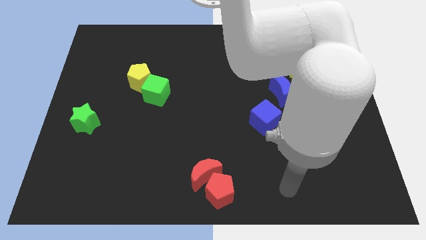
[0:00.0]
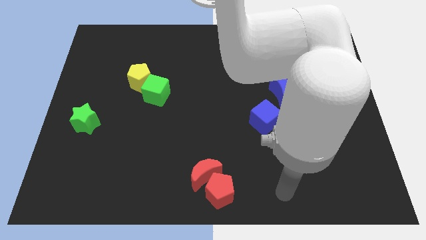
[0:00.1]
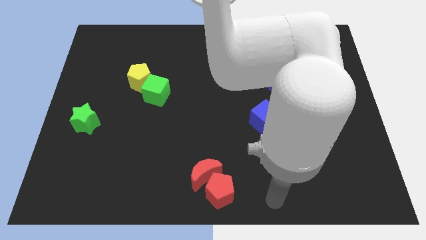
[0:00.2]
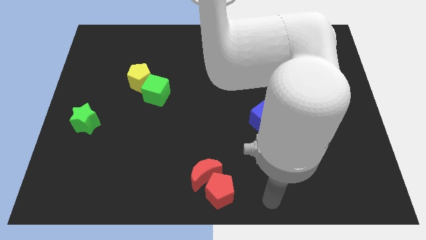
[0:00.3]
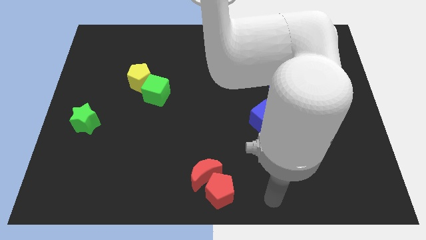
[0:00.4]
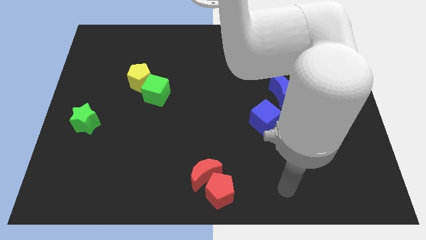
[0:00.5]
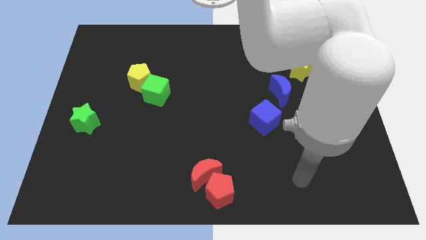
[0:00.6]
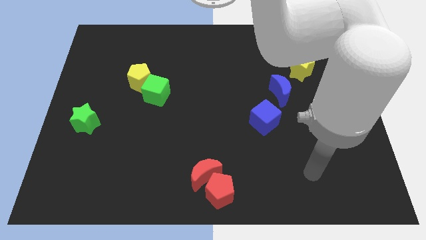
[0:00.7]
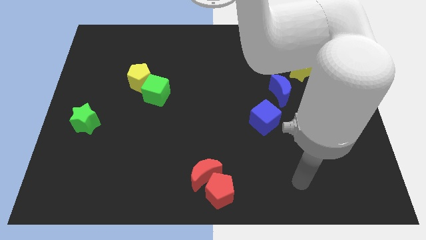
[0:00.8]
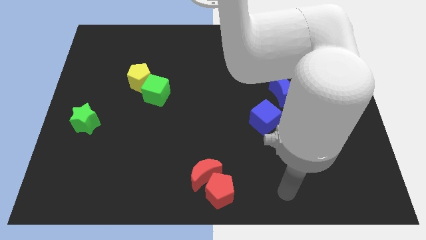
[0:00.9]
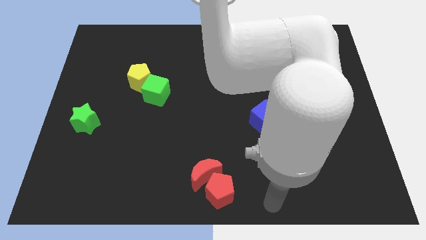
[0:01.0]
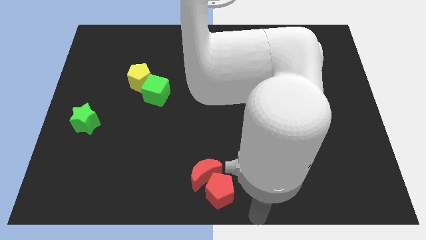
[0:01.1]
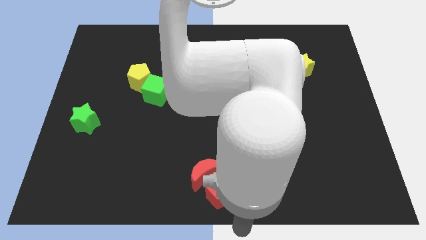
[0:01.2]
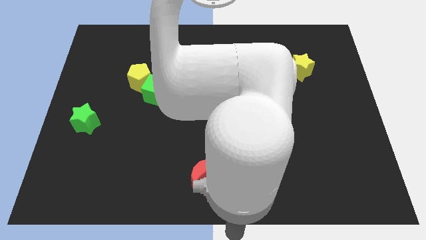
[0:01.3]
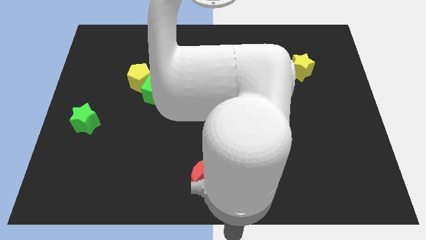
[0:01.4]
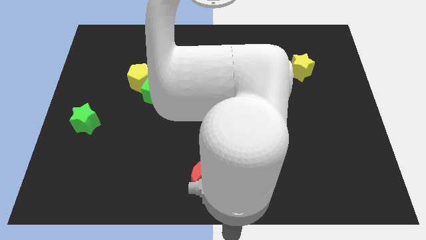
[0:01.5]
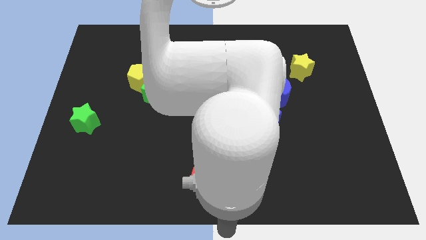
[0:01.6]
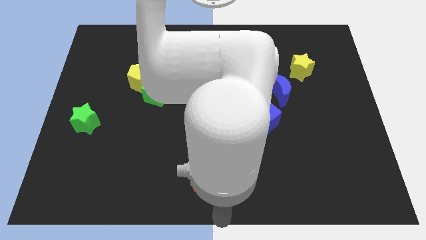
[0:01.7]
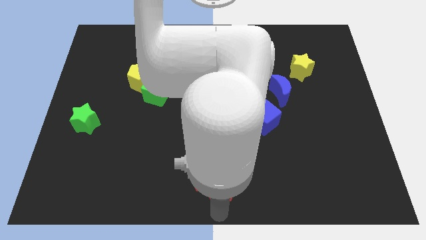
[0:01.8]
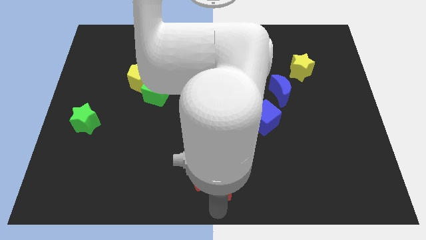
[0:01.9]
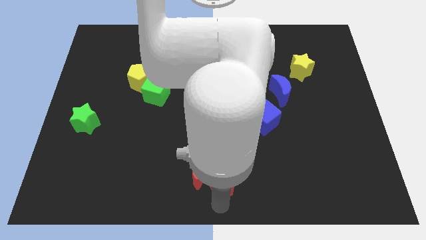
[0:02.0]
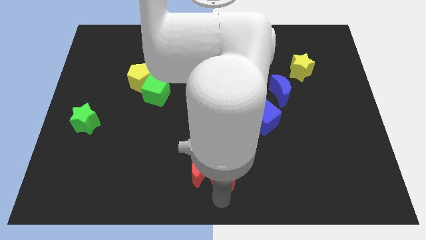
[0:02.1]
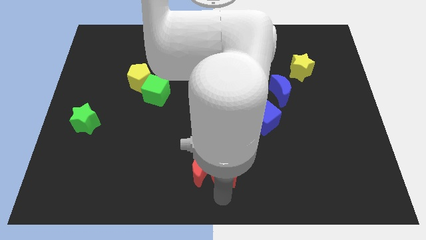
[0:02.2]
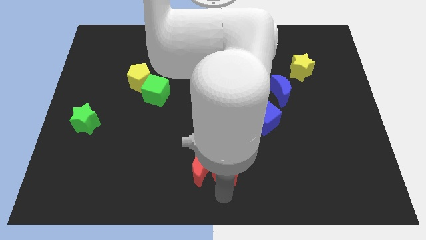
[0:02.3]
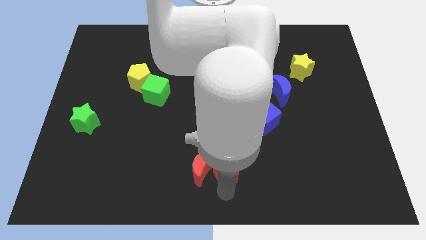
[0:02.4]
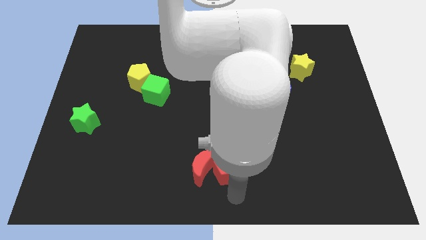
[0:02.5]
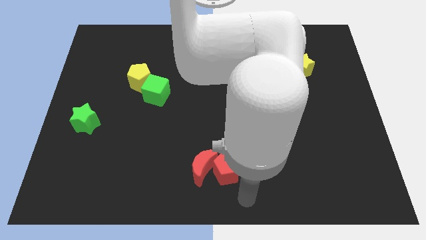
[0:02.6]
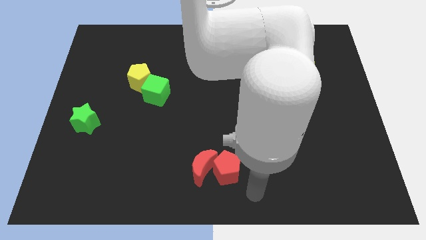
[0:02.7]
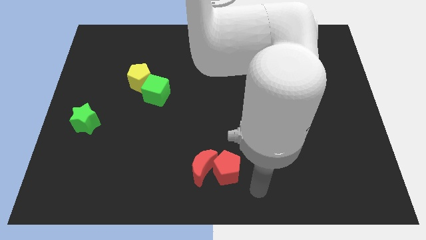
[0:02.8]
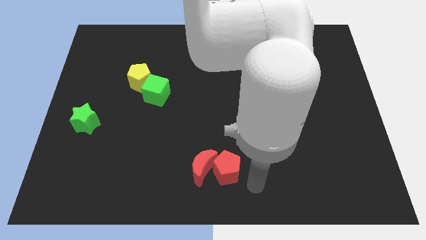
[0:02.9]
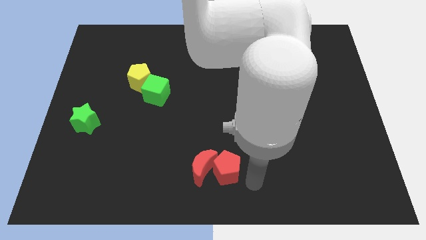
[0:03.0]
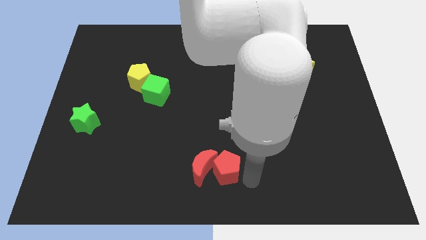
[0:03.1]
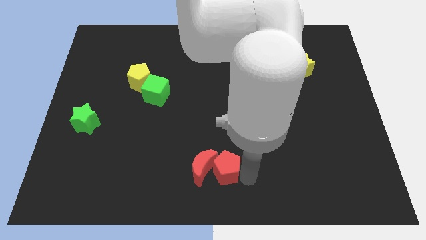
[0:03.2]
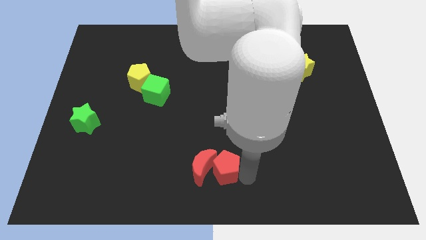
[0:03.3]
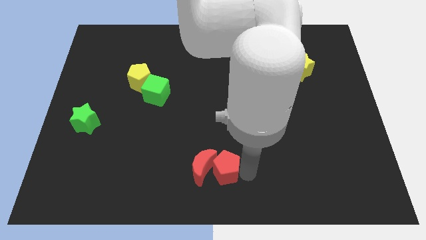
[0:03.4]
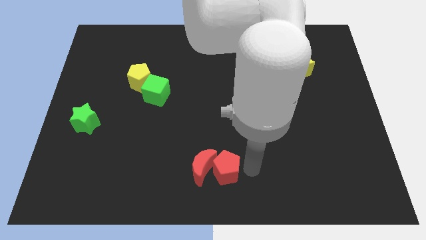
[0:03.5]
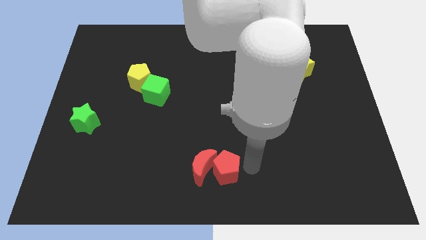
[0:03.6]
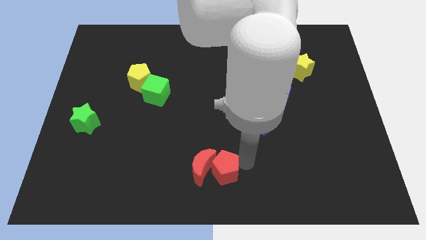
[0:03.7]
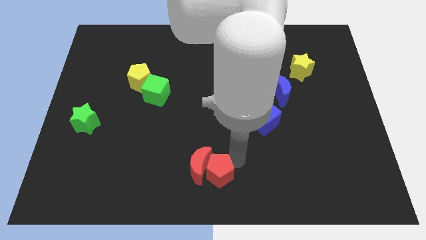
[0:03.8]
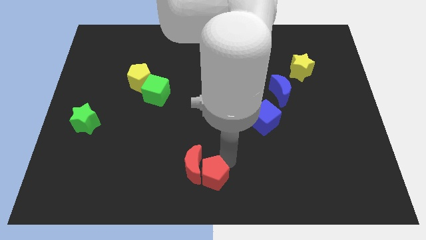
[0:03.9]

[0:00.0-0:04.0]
adjust the red pentagon to the right of the red moon

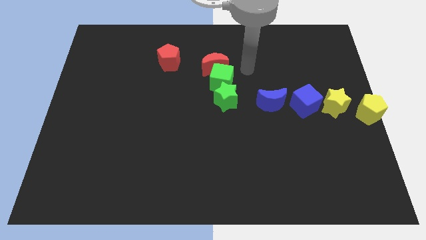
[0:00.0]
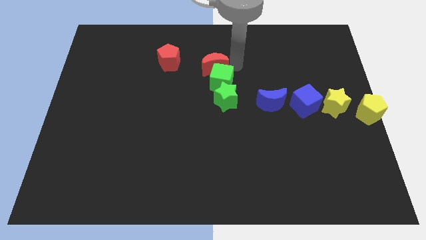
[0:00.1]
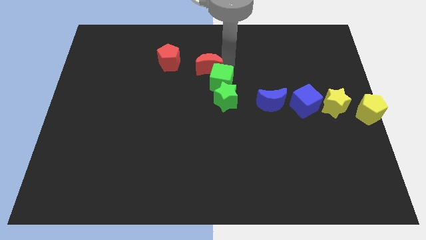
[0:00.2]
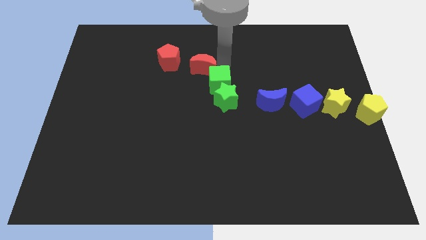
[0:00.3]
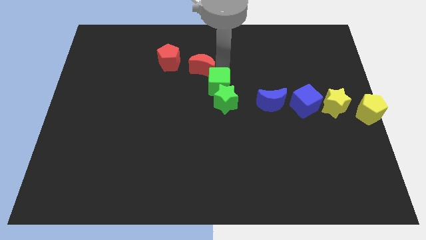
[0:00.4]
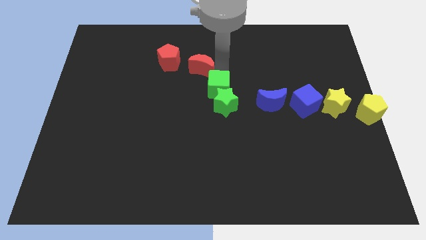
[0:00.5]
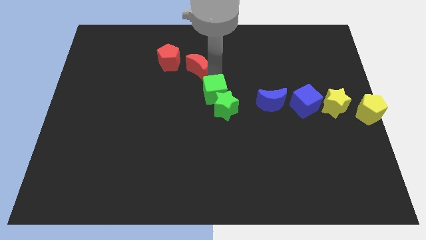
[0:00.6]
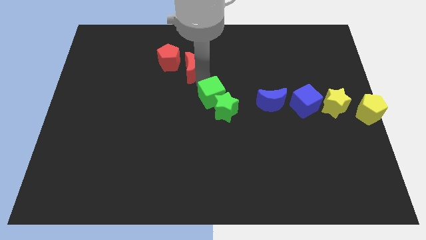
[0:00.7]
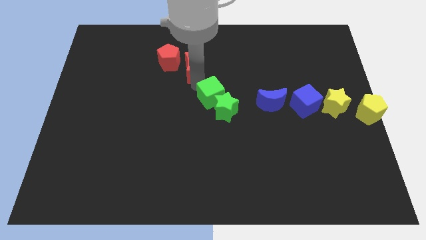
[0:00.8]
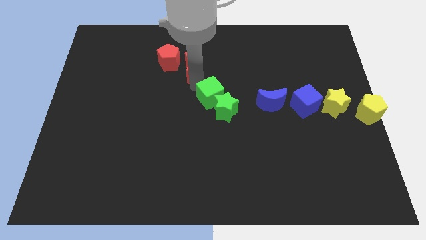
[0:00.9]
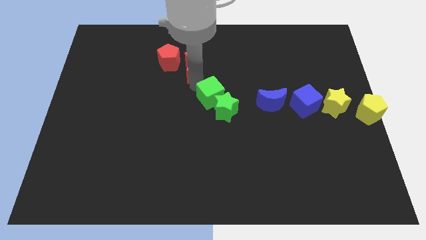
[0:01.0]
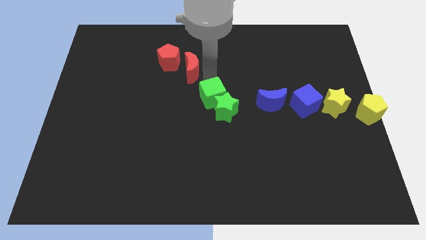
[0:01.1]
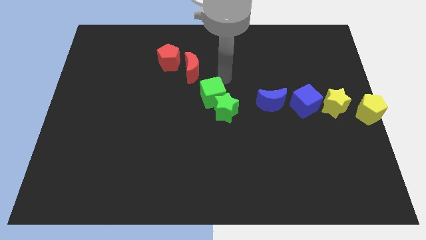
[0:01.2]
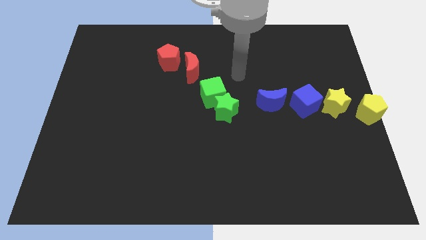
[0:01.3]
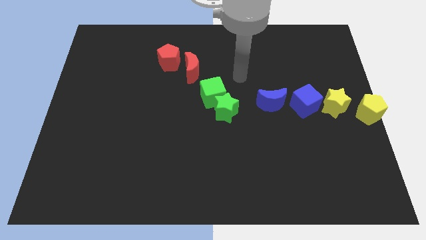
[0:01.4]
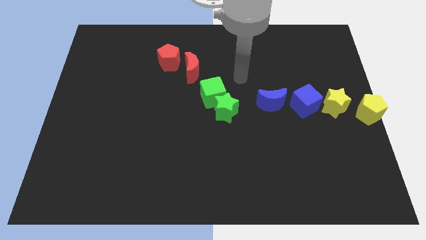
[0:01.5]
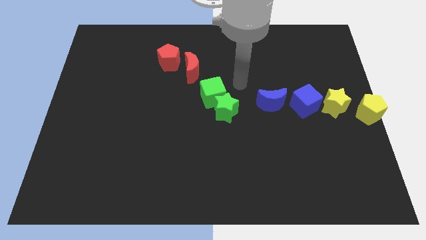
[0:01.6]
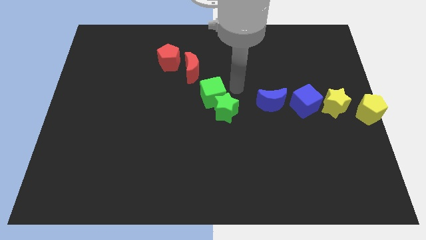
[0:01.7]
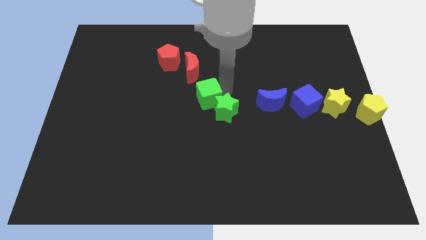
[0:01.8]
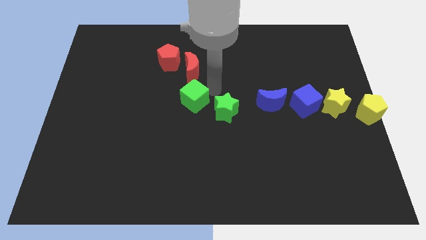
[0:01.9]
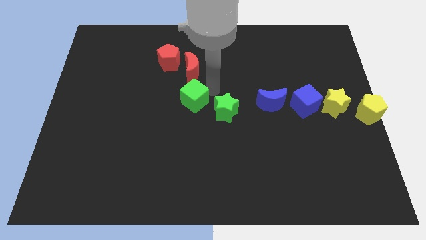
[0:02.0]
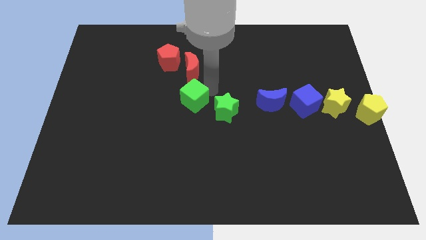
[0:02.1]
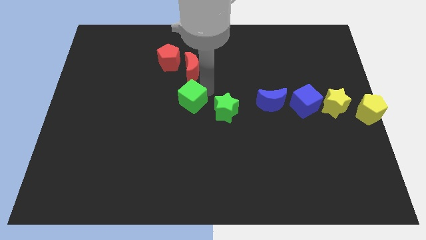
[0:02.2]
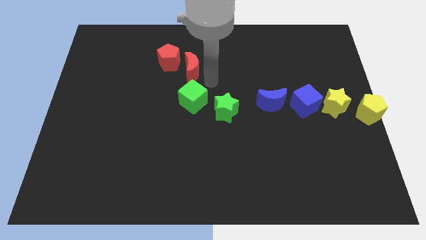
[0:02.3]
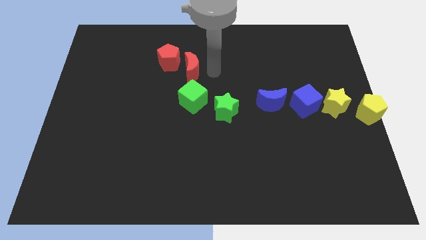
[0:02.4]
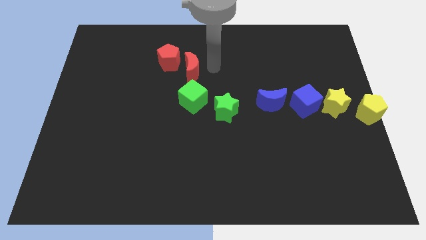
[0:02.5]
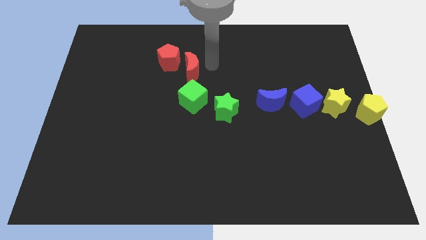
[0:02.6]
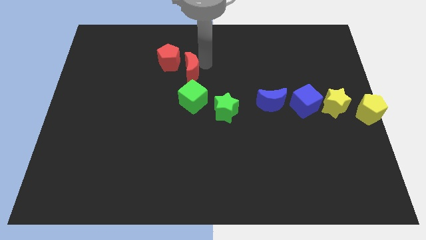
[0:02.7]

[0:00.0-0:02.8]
place the green cube to the left of the green star

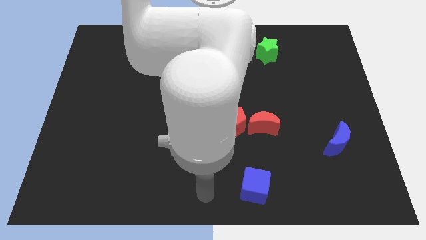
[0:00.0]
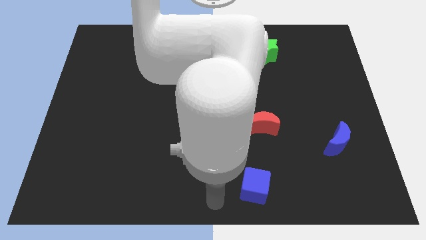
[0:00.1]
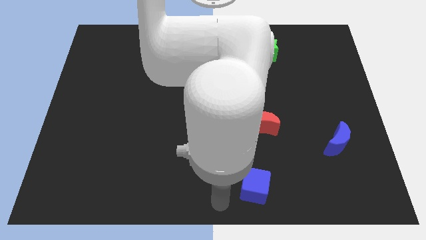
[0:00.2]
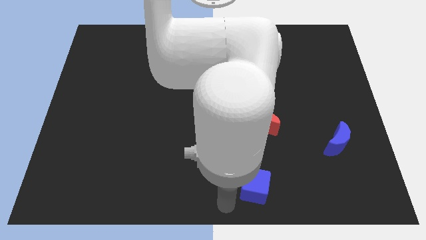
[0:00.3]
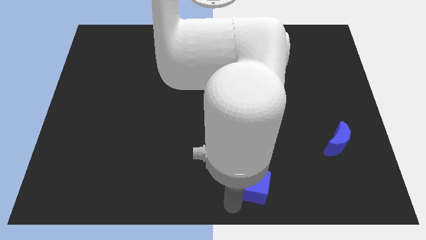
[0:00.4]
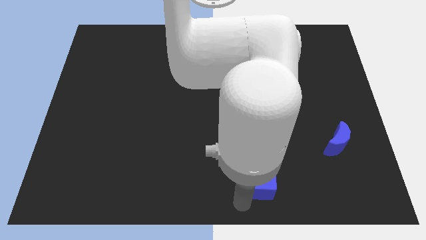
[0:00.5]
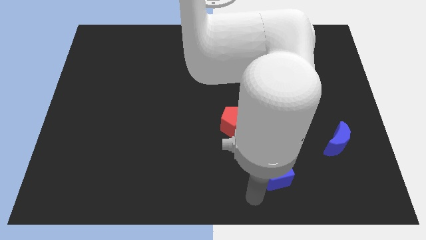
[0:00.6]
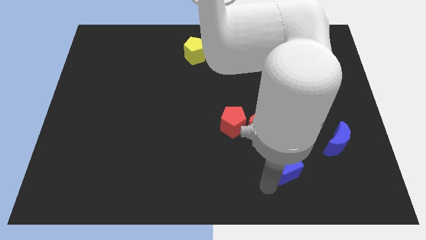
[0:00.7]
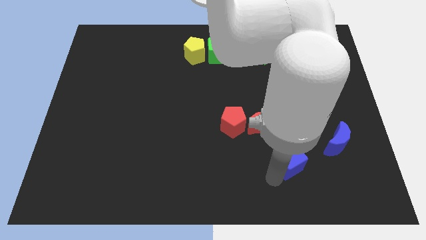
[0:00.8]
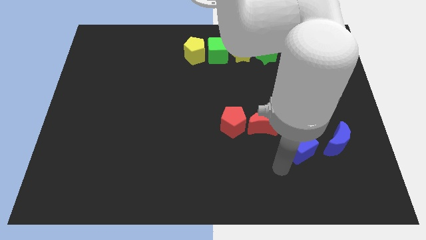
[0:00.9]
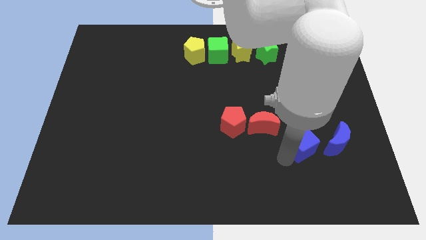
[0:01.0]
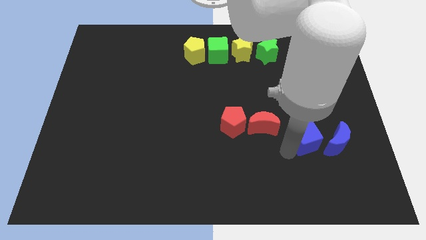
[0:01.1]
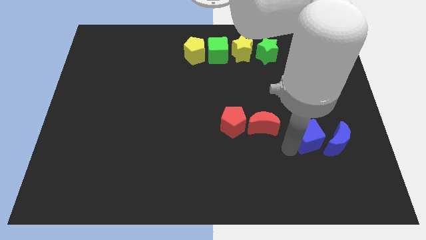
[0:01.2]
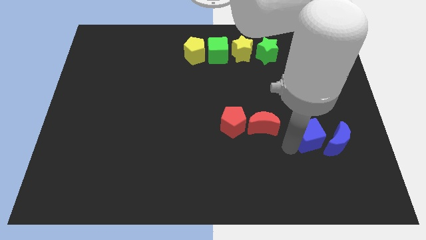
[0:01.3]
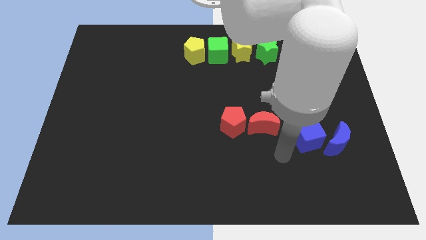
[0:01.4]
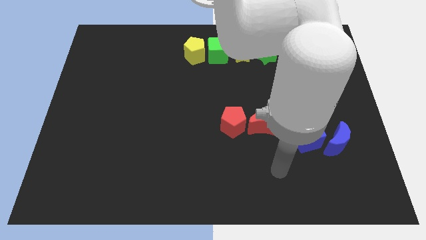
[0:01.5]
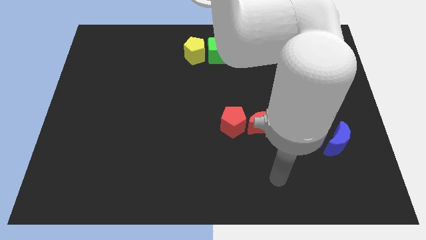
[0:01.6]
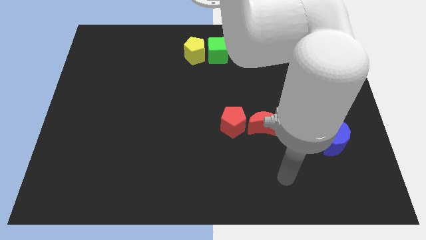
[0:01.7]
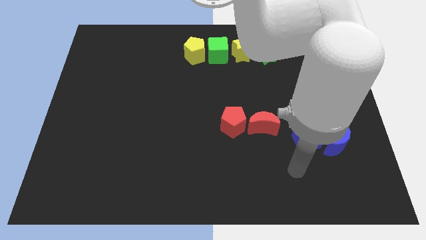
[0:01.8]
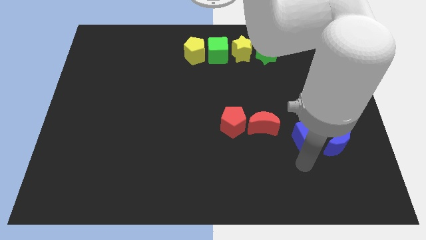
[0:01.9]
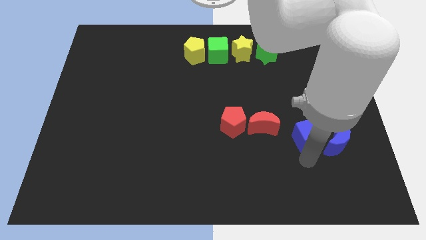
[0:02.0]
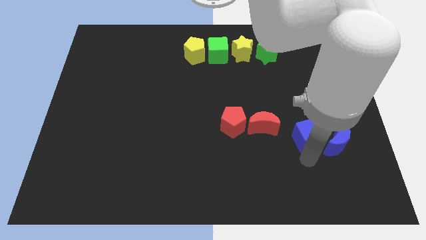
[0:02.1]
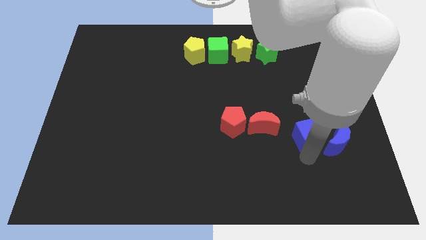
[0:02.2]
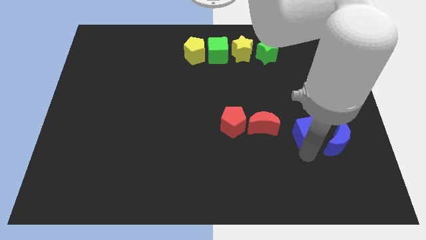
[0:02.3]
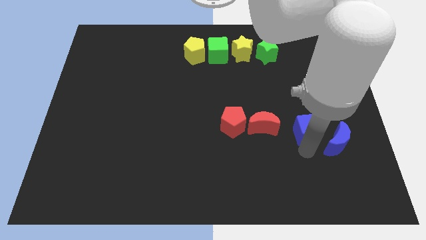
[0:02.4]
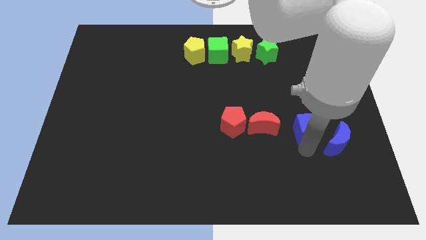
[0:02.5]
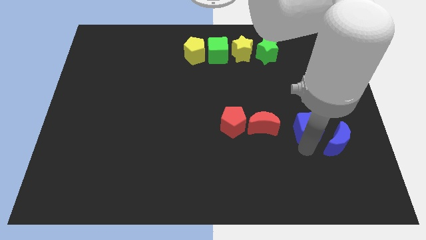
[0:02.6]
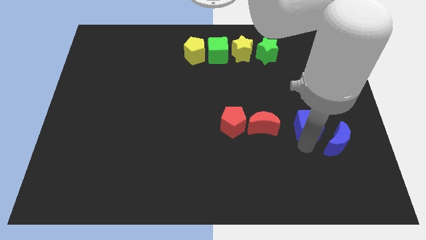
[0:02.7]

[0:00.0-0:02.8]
move blue cube to the right of red crescent
